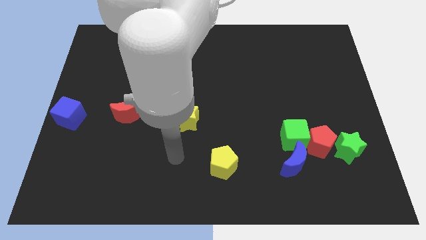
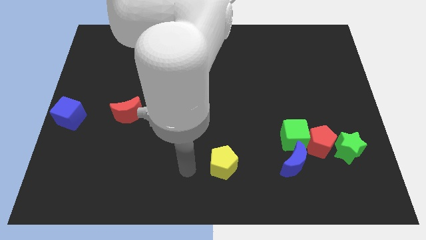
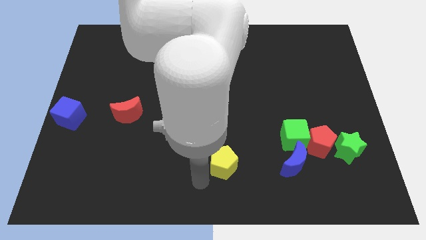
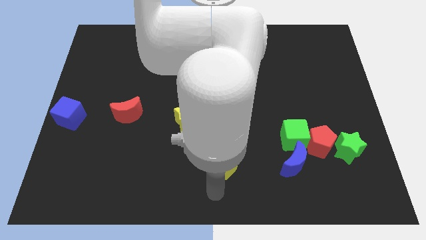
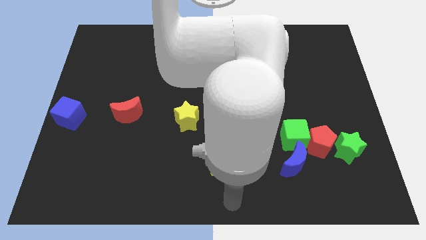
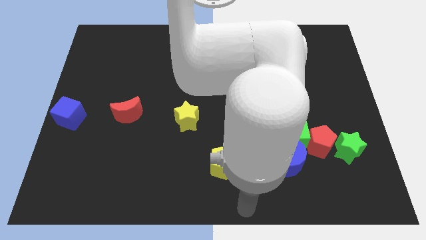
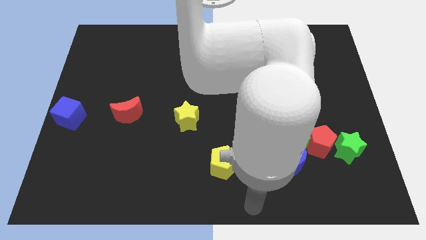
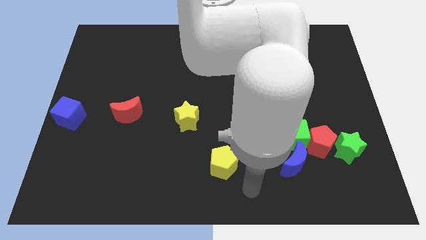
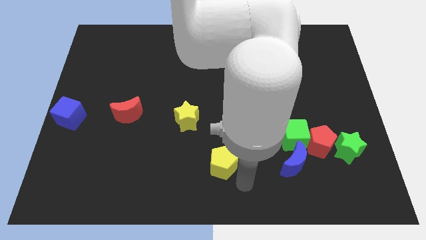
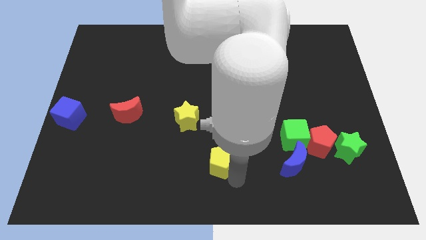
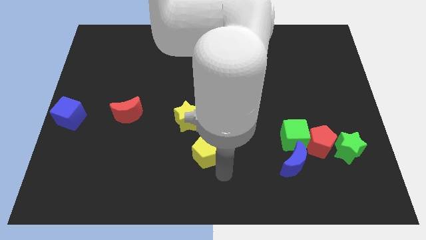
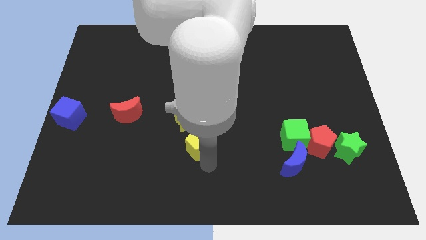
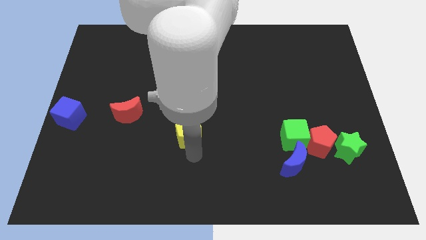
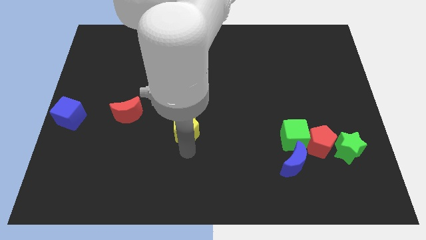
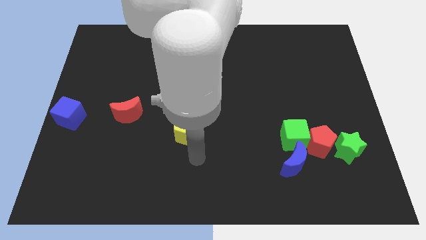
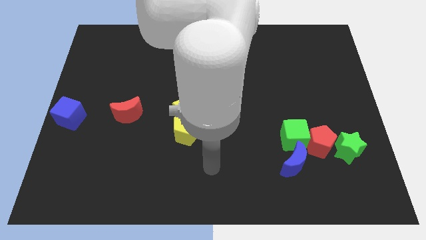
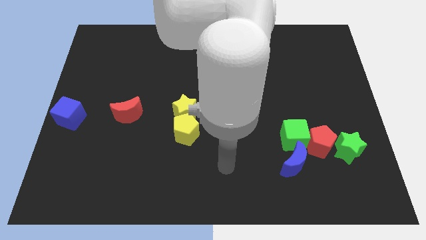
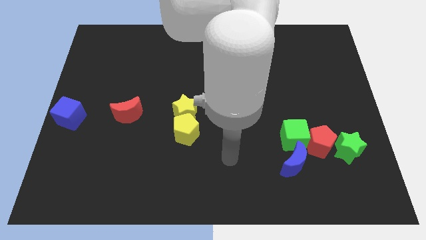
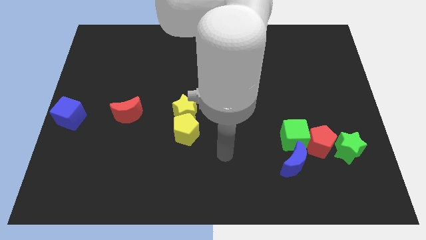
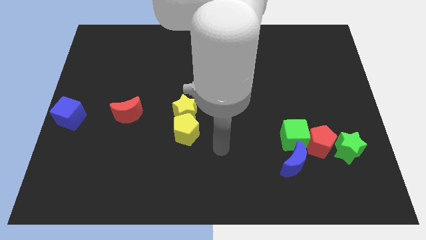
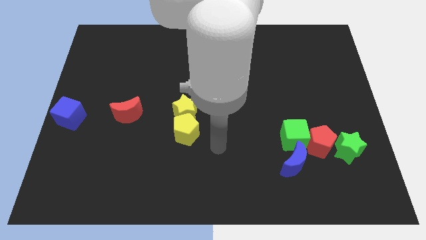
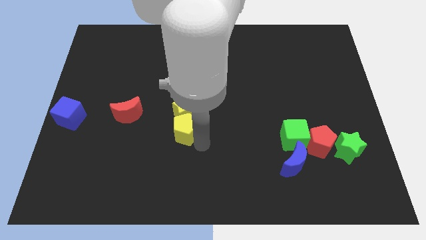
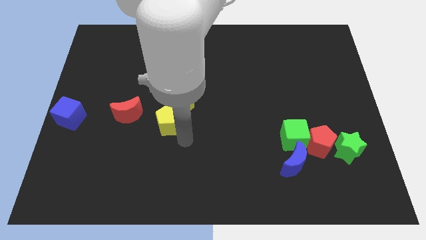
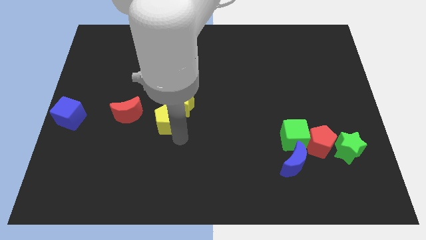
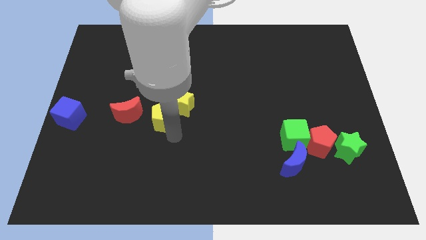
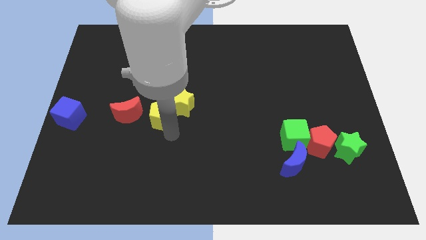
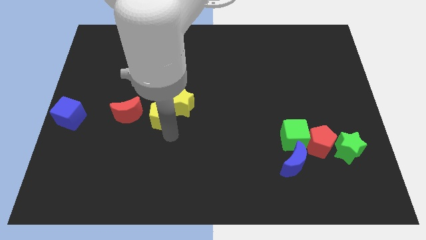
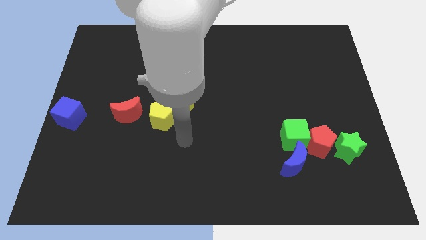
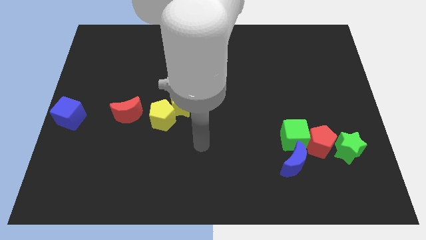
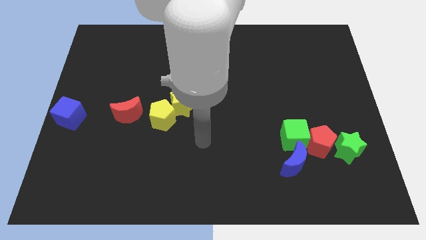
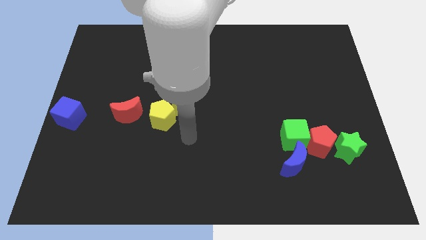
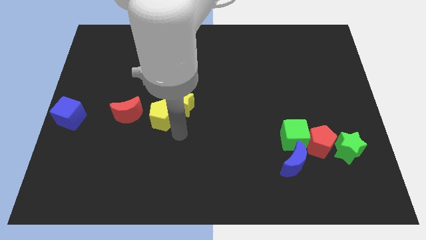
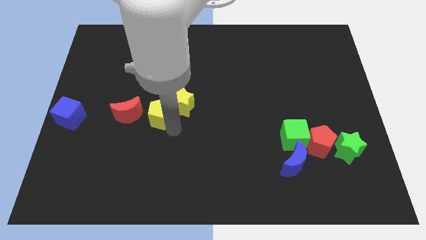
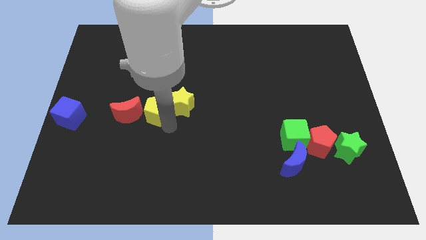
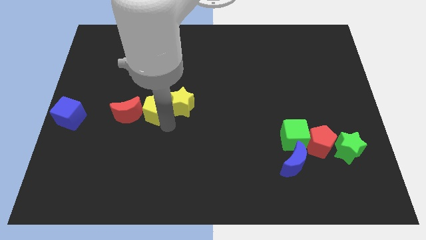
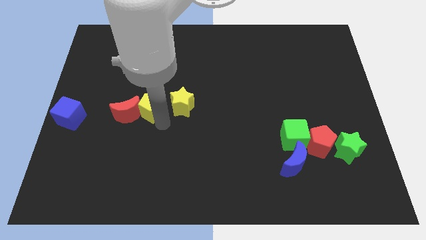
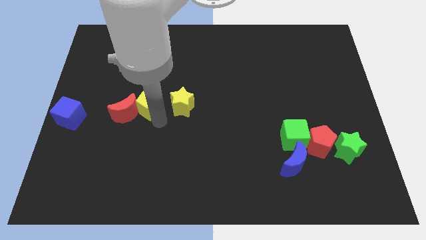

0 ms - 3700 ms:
place the yellow pentagon in between the red moon and the yellow star

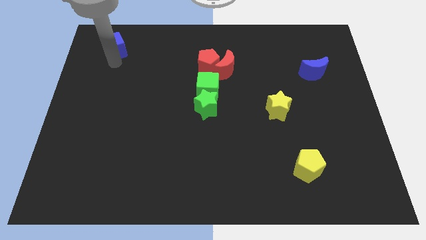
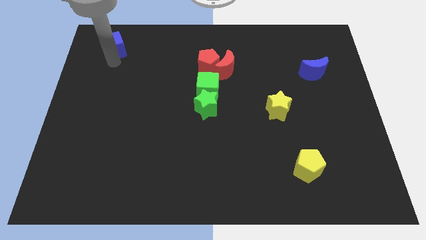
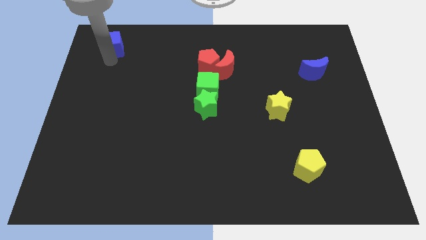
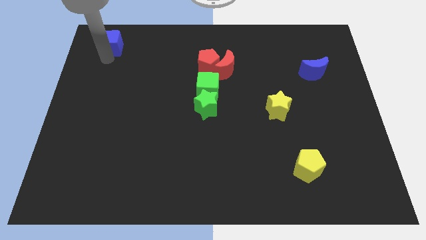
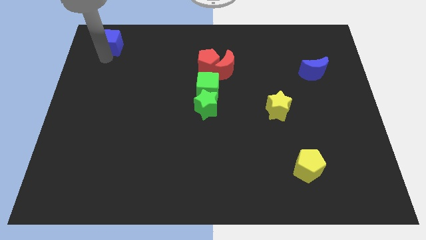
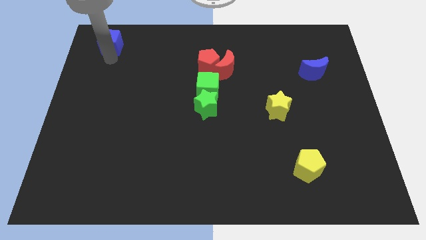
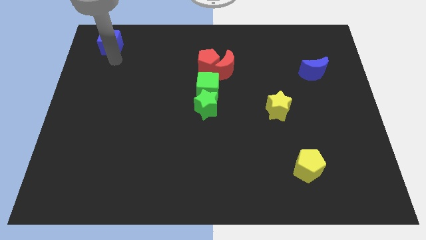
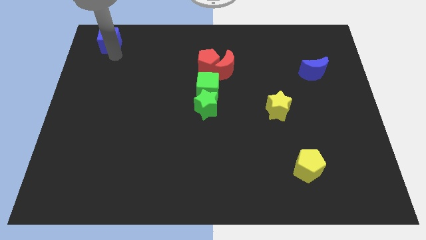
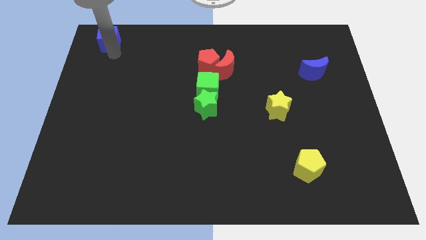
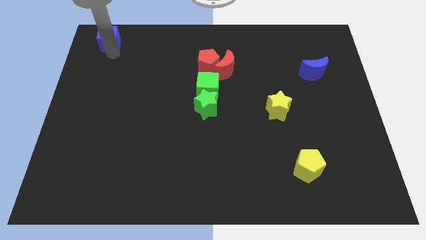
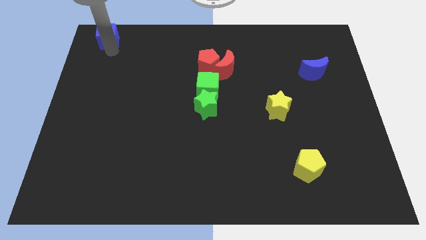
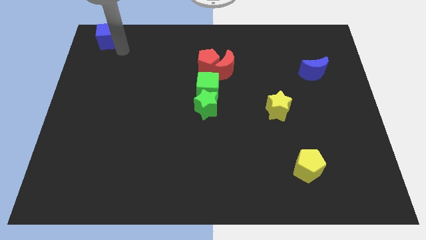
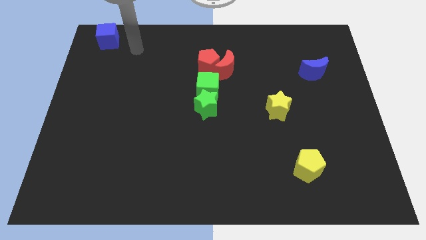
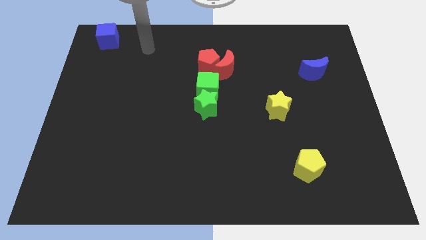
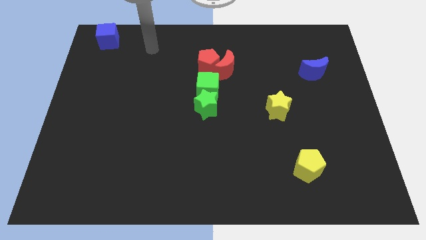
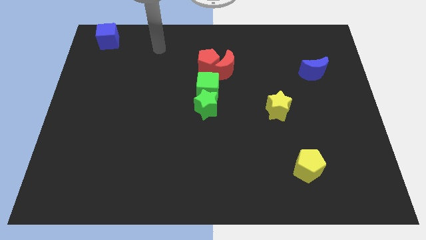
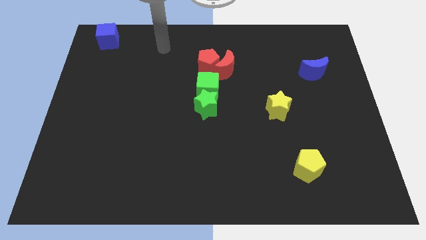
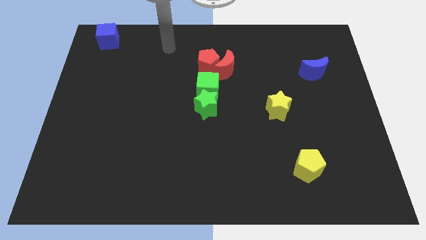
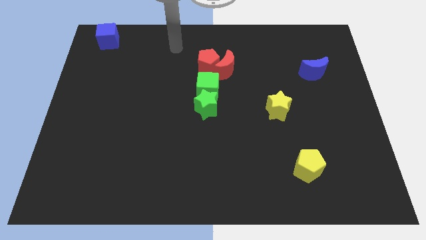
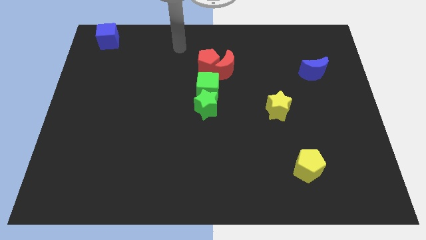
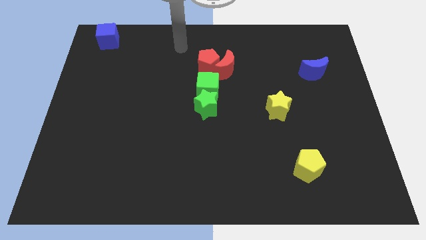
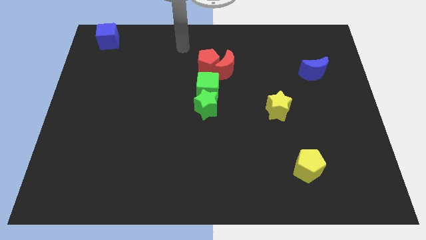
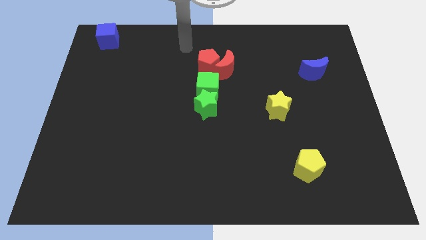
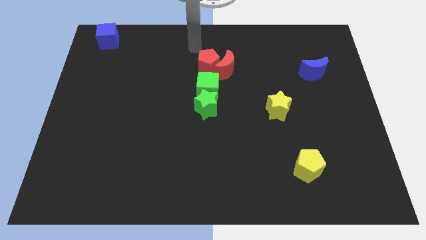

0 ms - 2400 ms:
move the blue cube towards the top left

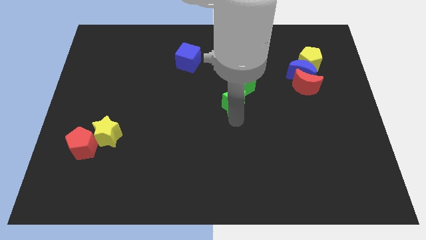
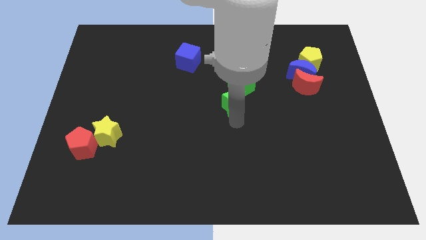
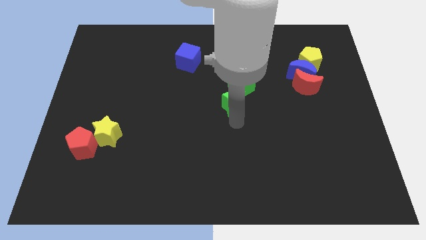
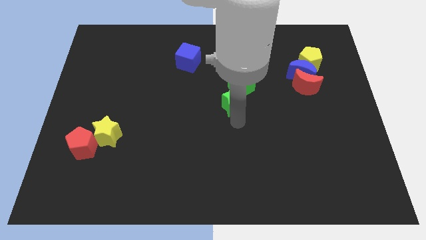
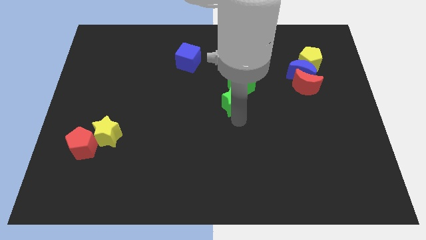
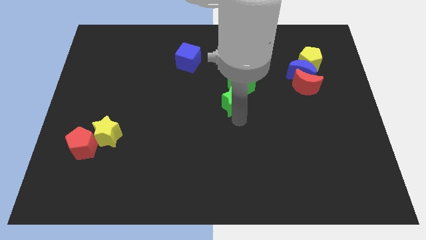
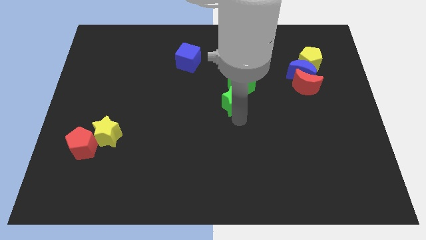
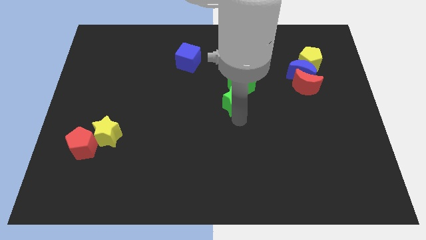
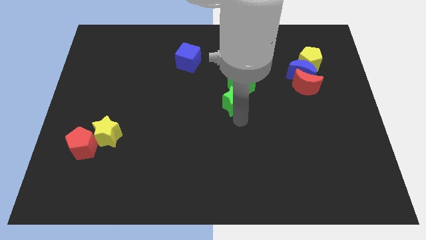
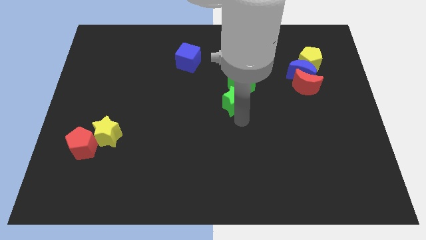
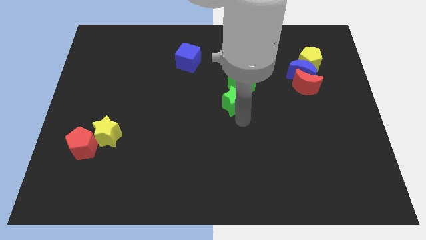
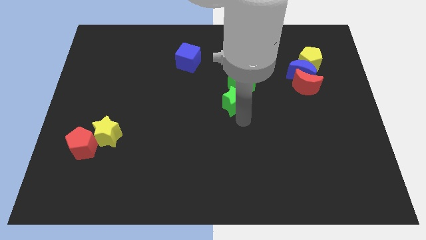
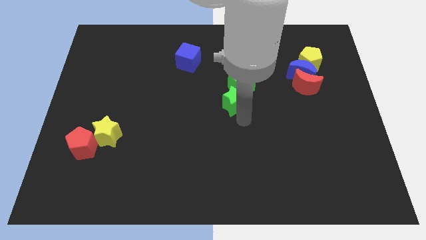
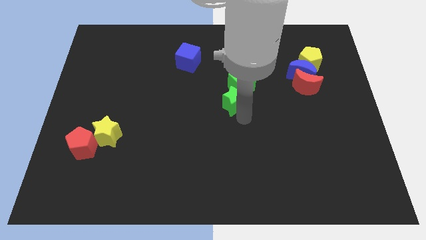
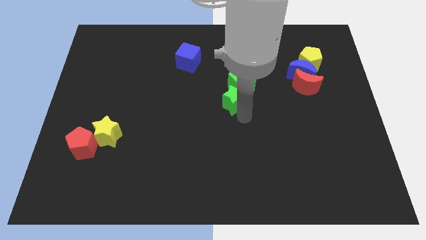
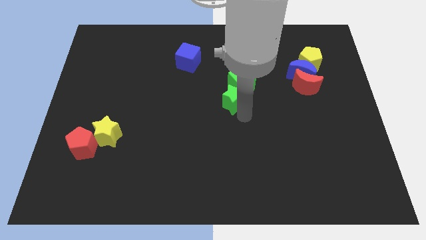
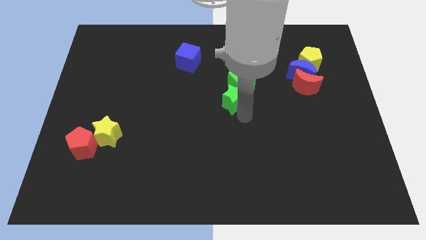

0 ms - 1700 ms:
push the green star into the green cube

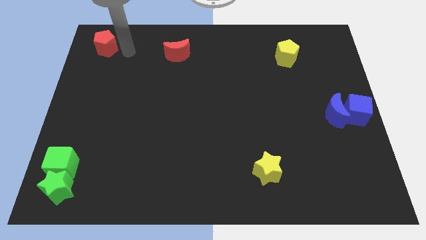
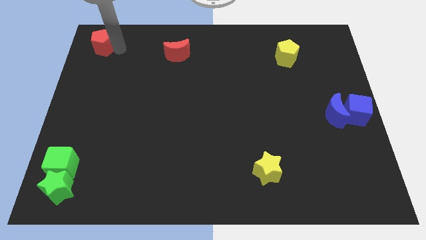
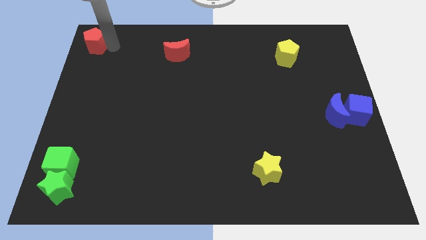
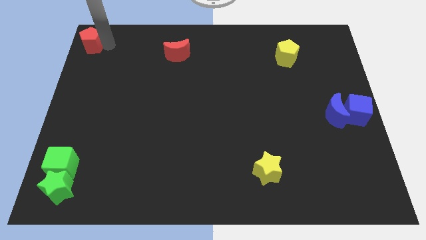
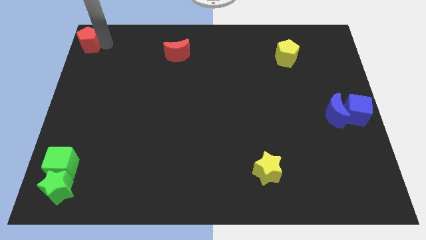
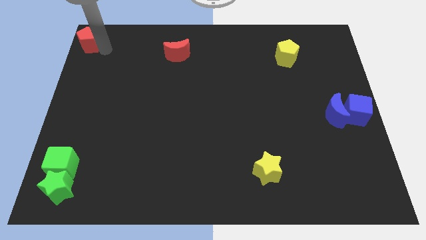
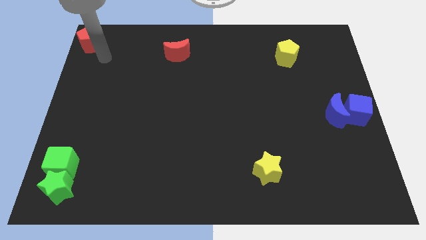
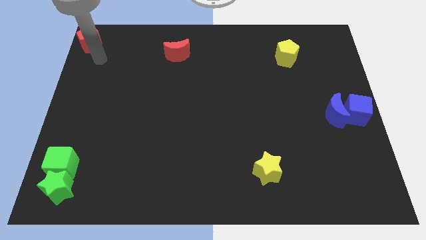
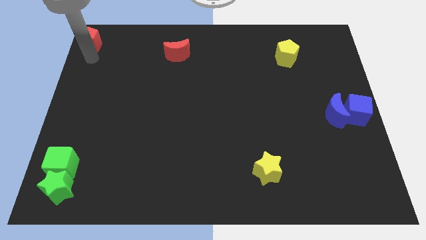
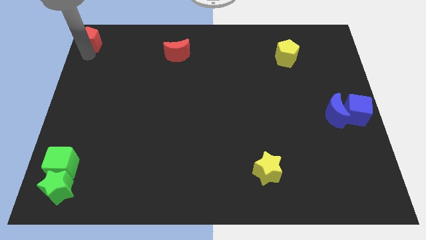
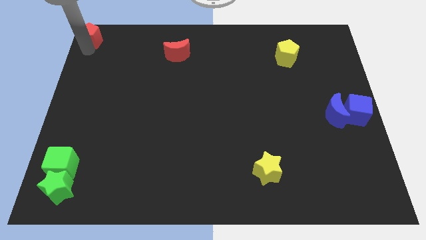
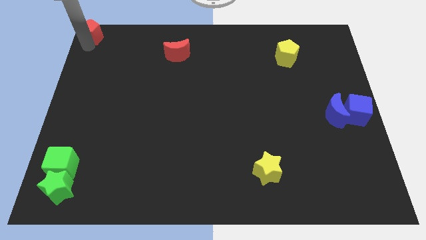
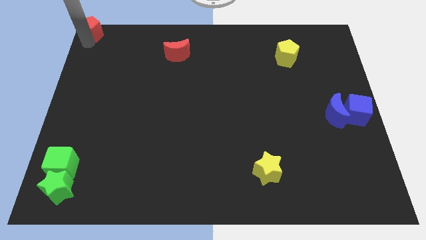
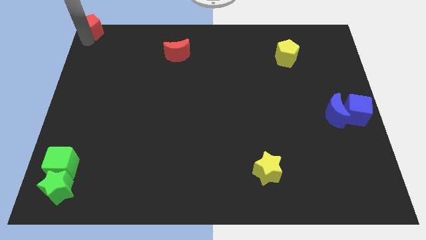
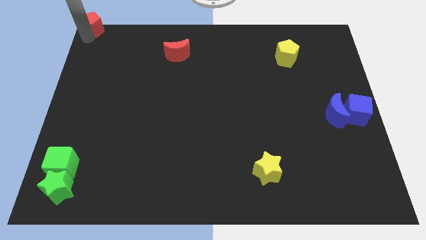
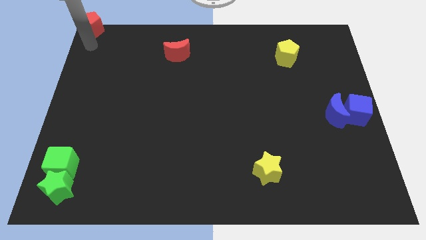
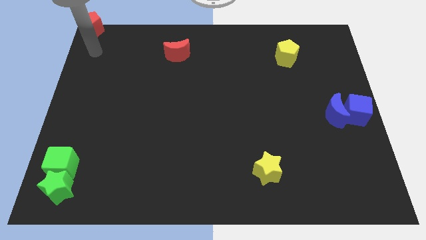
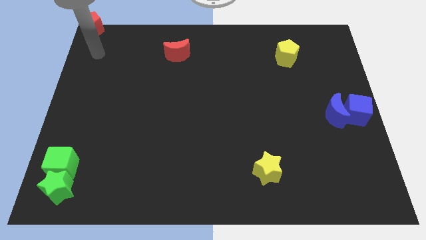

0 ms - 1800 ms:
place the red pentagon to the top left
